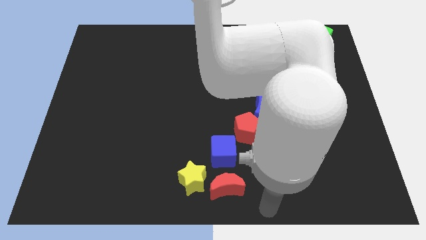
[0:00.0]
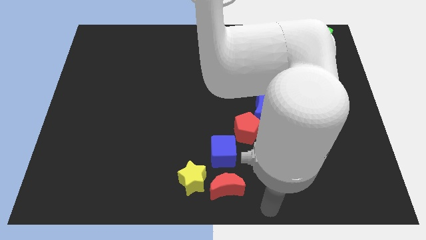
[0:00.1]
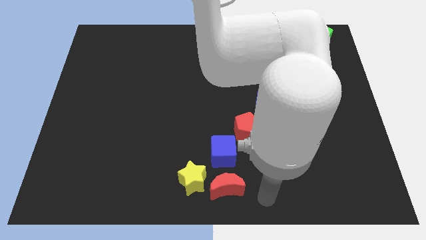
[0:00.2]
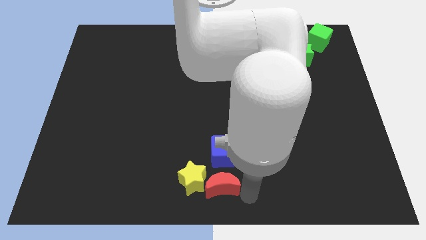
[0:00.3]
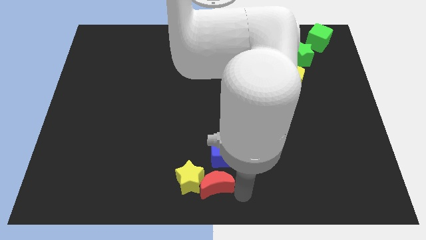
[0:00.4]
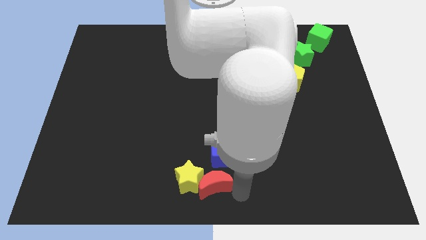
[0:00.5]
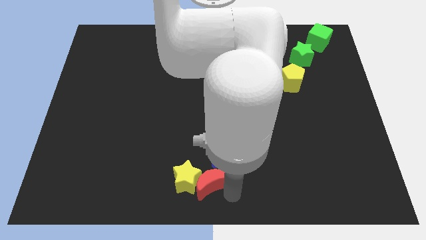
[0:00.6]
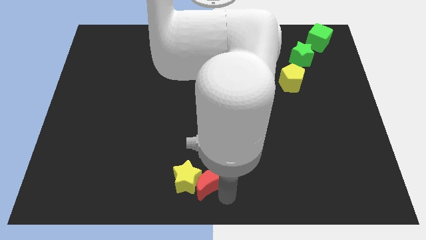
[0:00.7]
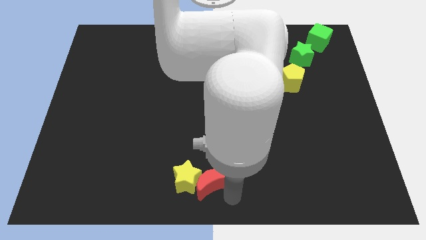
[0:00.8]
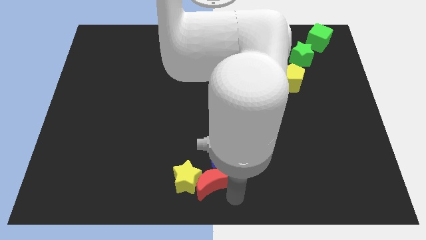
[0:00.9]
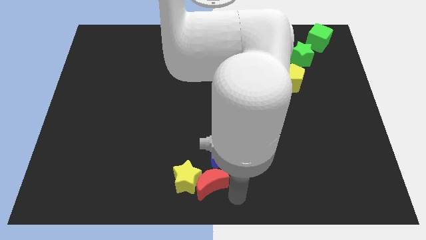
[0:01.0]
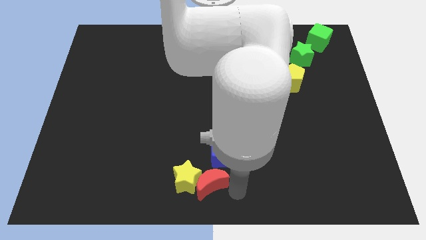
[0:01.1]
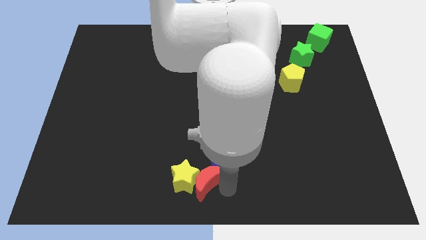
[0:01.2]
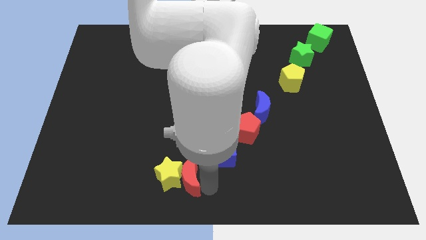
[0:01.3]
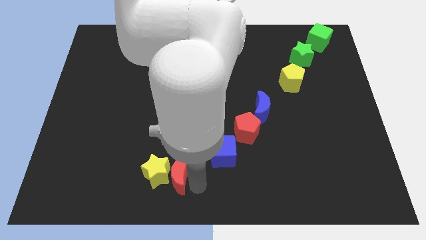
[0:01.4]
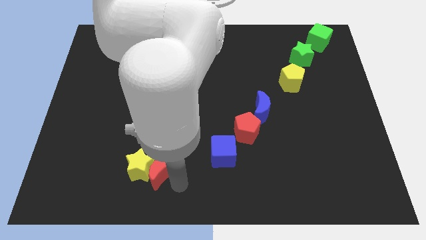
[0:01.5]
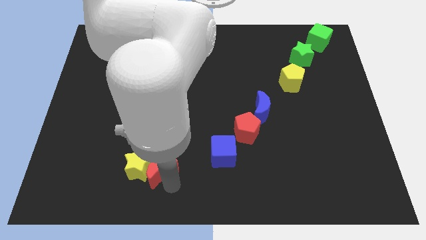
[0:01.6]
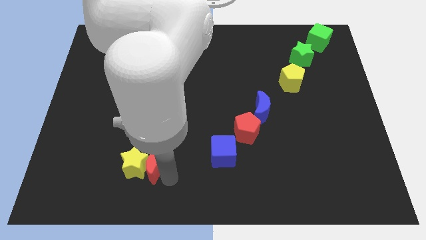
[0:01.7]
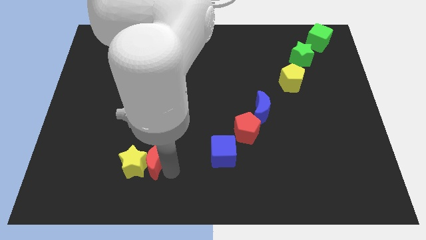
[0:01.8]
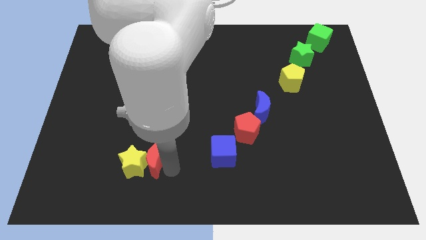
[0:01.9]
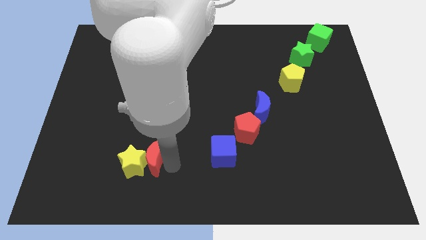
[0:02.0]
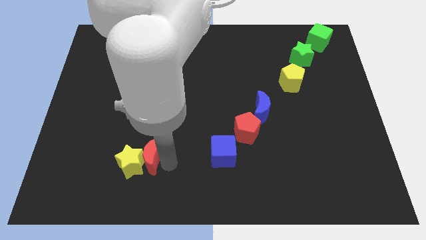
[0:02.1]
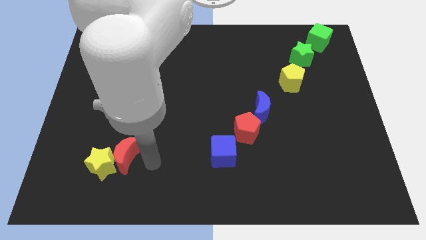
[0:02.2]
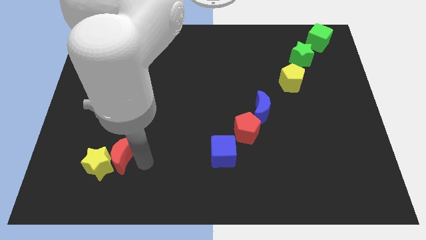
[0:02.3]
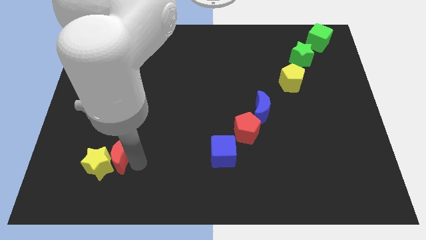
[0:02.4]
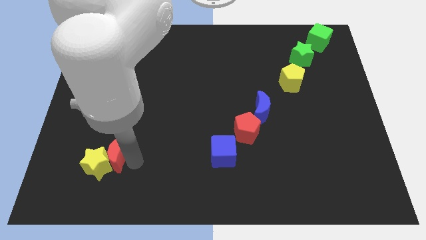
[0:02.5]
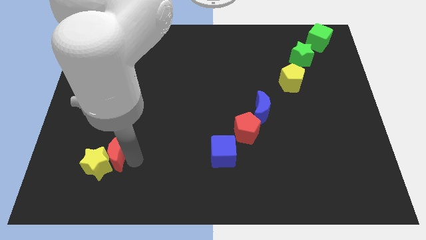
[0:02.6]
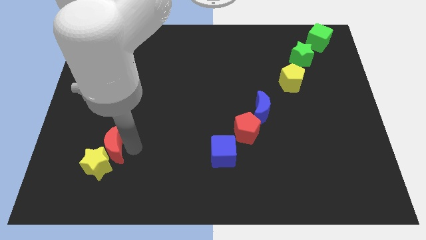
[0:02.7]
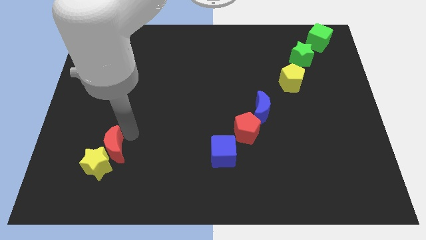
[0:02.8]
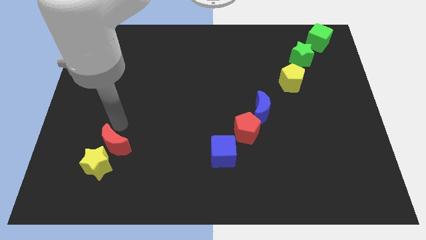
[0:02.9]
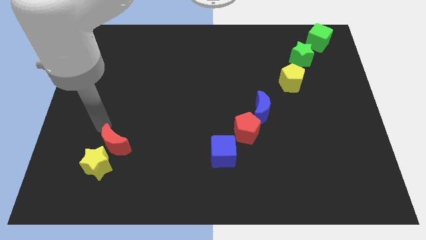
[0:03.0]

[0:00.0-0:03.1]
push the red moon and yellow star to the left side of the table

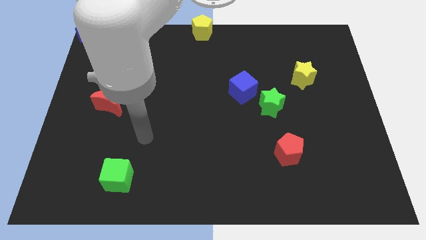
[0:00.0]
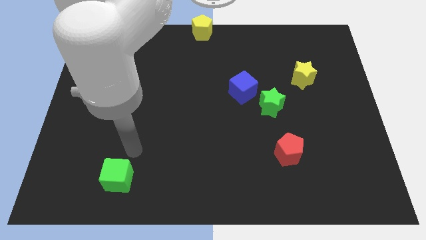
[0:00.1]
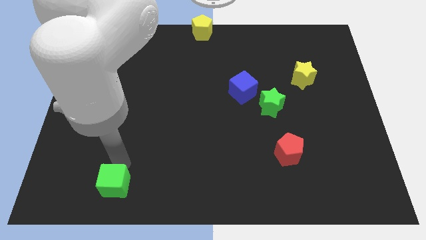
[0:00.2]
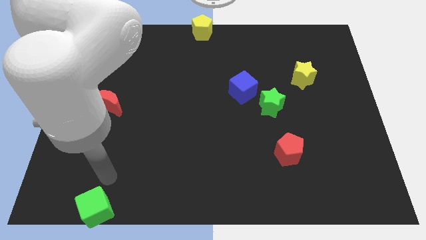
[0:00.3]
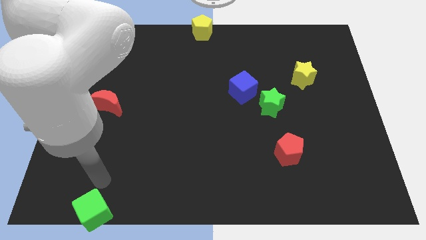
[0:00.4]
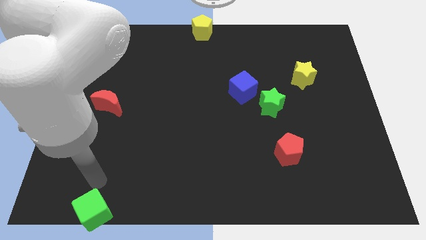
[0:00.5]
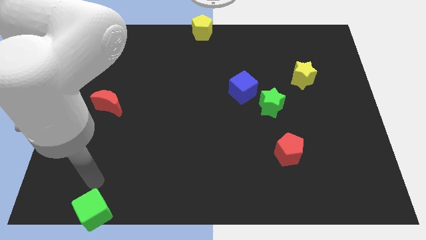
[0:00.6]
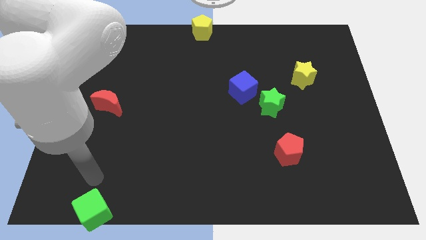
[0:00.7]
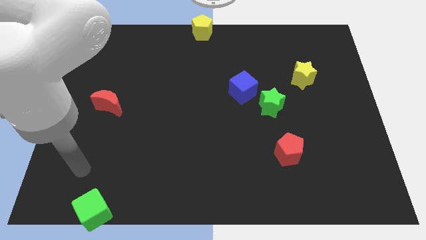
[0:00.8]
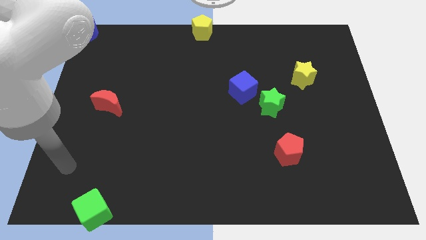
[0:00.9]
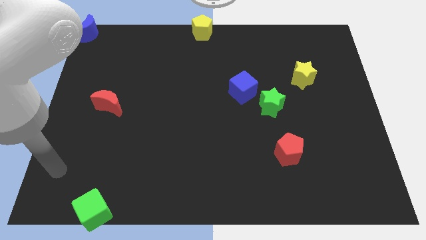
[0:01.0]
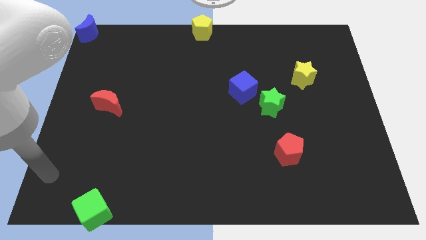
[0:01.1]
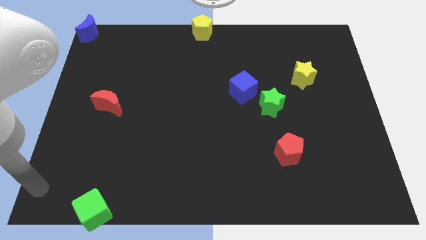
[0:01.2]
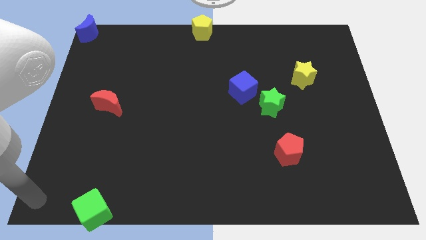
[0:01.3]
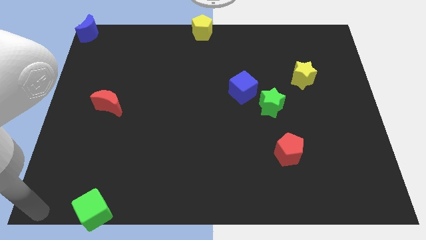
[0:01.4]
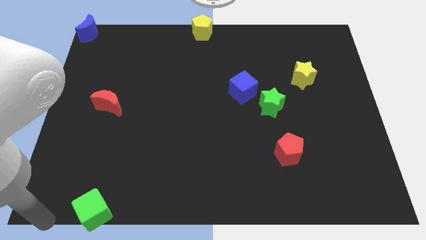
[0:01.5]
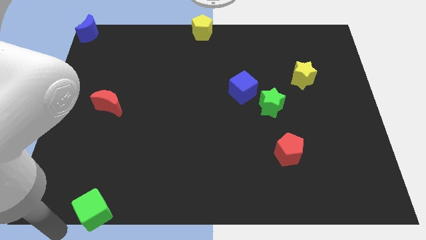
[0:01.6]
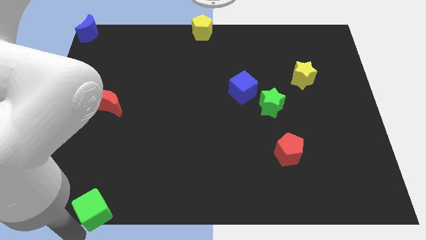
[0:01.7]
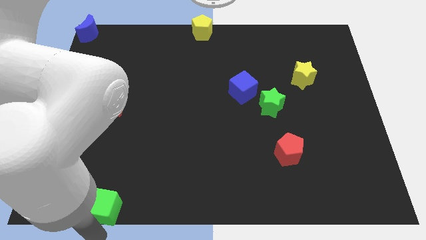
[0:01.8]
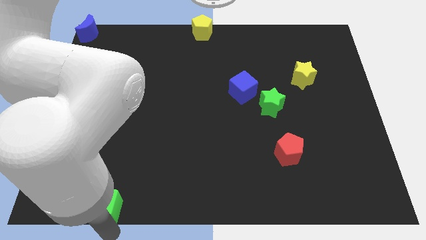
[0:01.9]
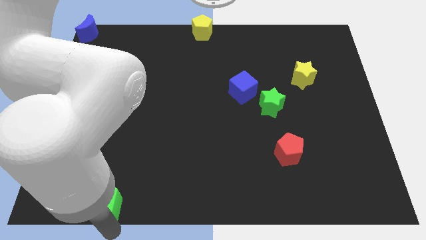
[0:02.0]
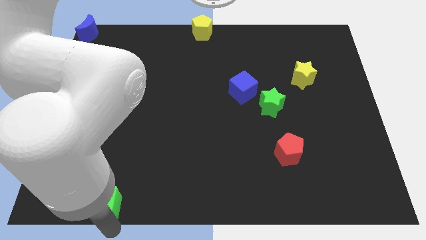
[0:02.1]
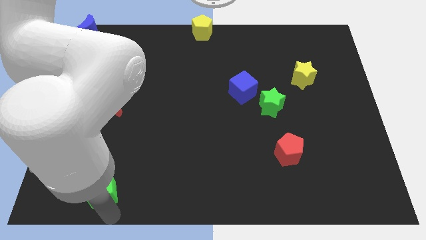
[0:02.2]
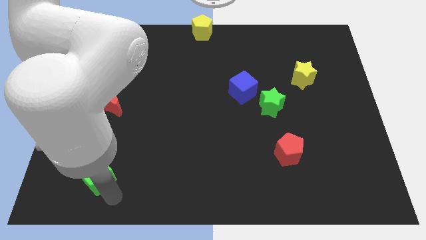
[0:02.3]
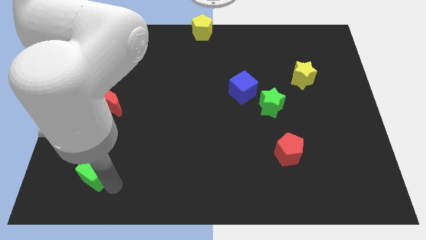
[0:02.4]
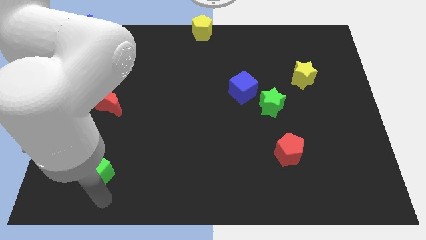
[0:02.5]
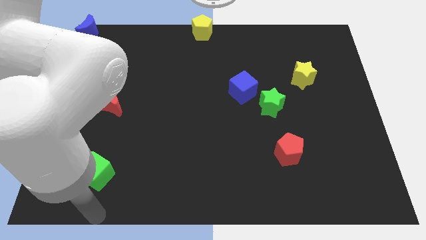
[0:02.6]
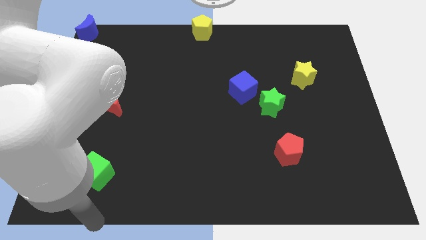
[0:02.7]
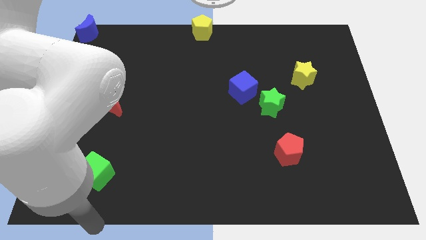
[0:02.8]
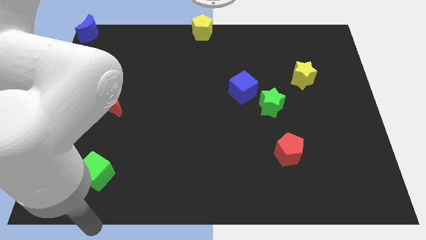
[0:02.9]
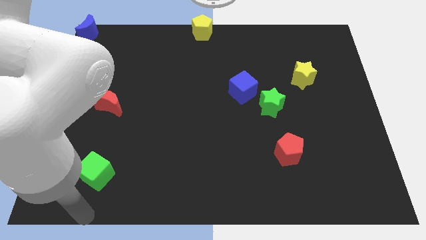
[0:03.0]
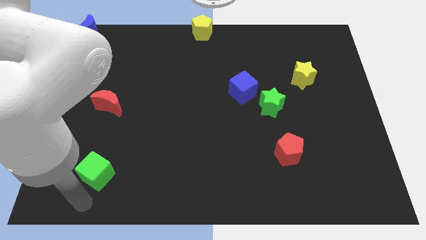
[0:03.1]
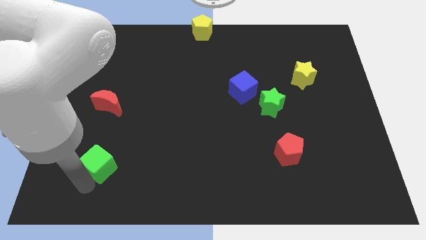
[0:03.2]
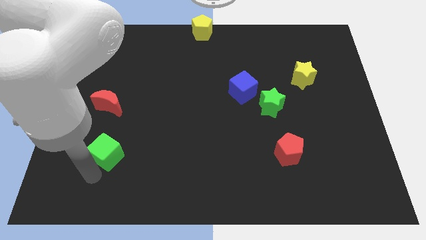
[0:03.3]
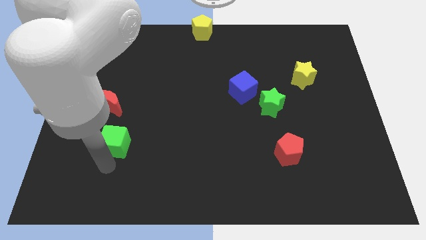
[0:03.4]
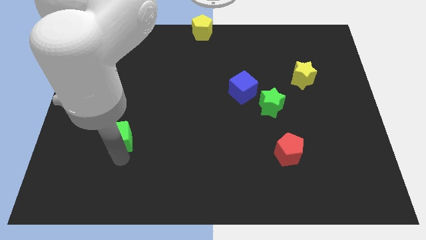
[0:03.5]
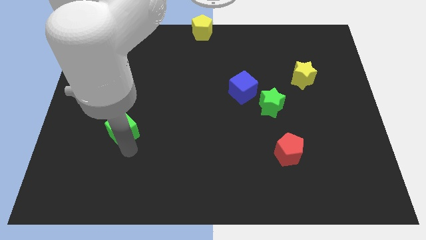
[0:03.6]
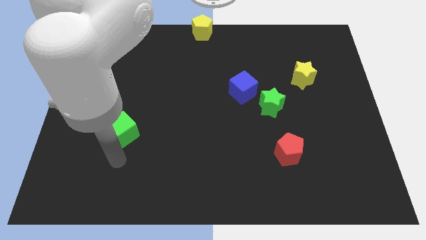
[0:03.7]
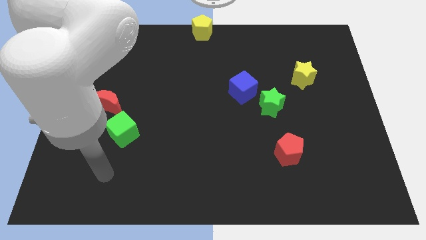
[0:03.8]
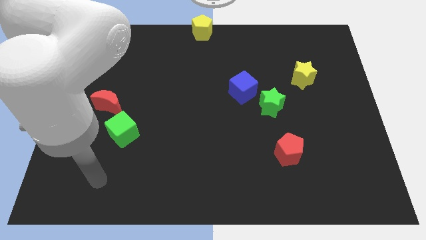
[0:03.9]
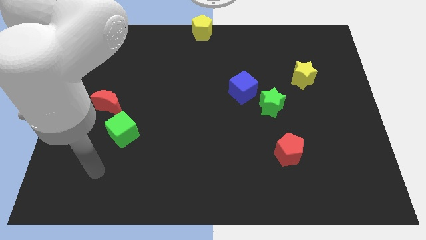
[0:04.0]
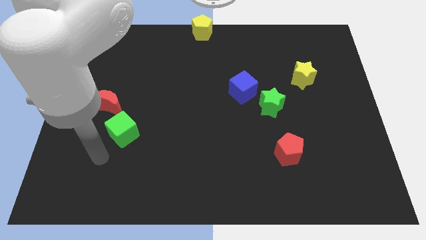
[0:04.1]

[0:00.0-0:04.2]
slide green cube into red moon

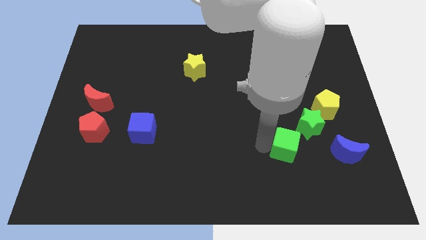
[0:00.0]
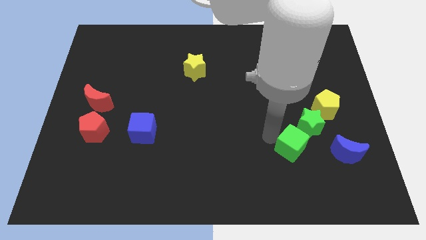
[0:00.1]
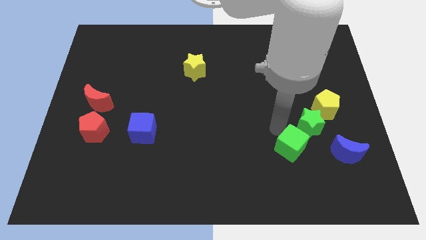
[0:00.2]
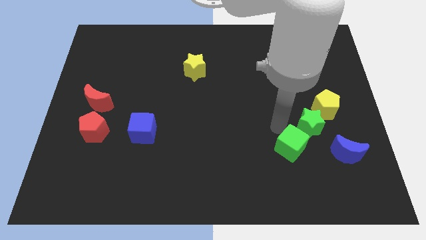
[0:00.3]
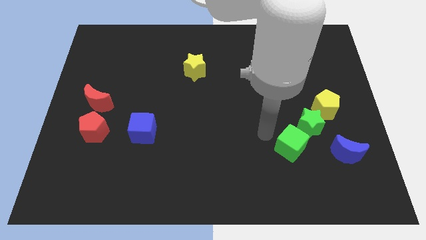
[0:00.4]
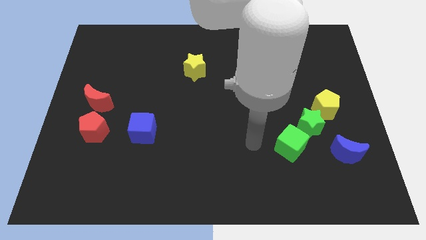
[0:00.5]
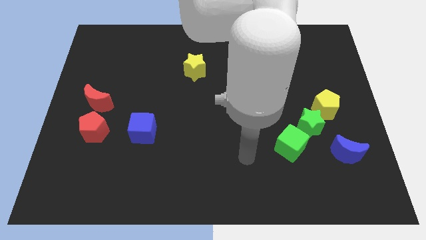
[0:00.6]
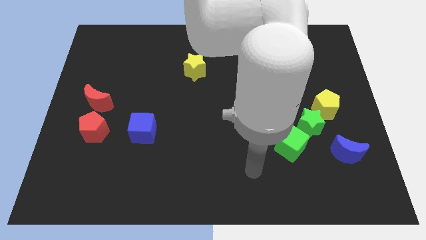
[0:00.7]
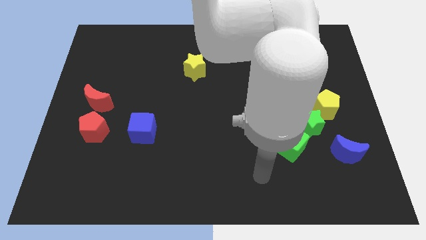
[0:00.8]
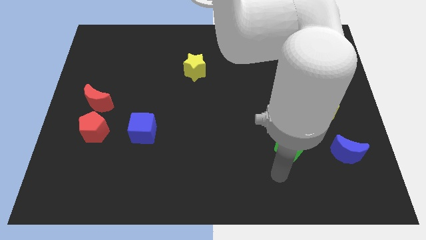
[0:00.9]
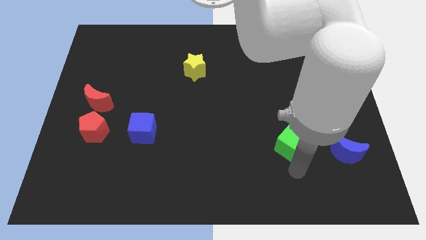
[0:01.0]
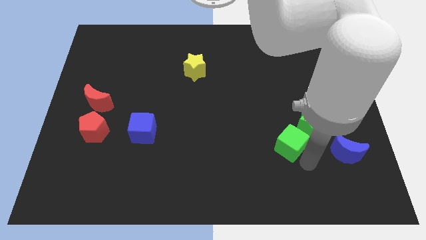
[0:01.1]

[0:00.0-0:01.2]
move your arm bottom right of the green cube

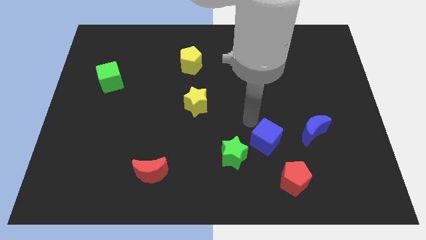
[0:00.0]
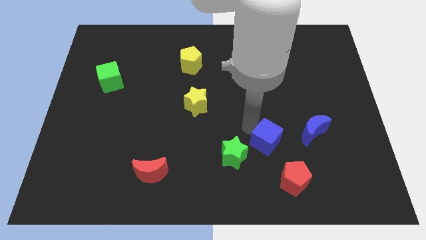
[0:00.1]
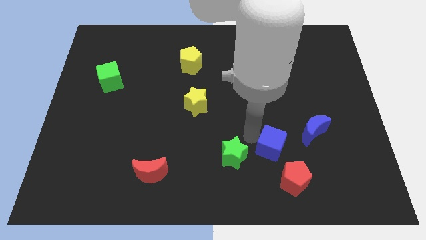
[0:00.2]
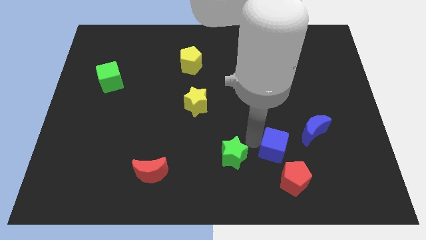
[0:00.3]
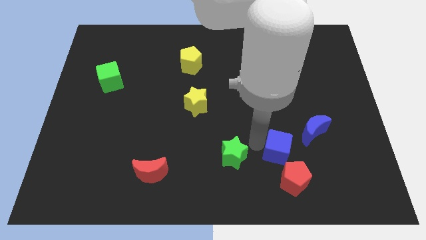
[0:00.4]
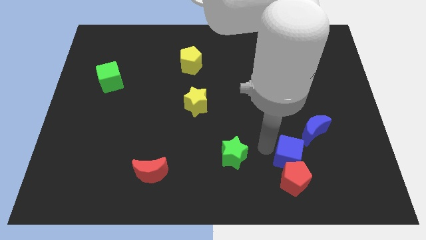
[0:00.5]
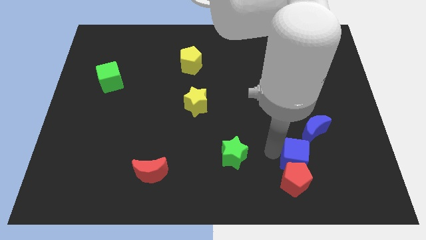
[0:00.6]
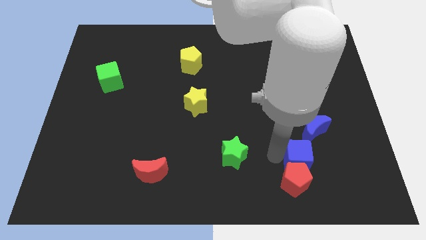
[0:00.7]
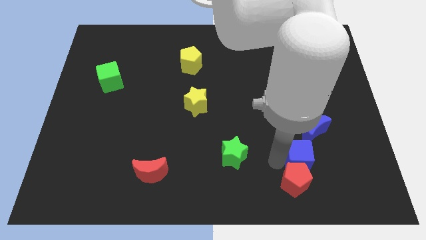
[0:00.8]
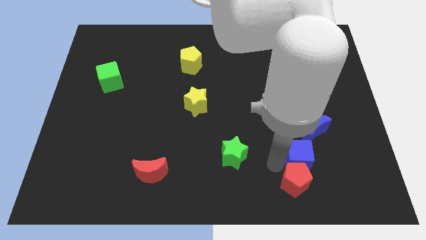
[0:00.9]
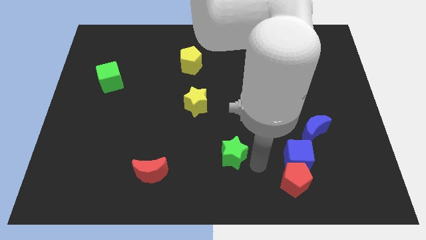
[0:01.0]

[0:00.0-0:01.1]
place the blue cube above the red pentagon
